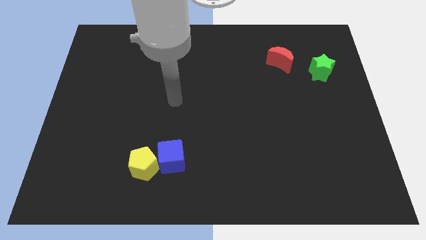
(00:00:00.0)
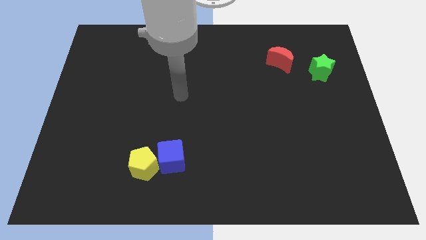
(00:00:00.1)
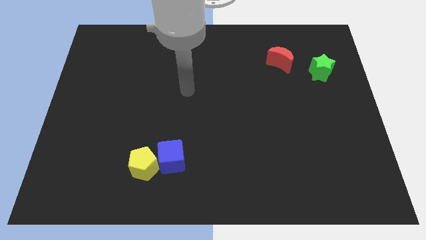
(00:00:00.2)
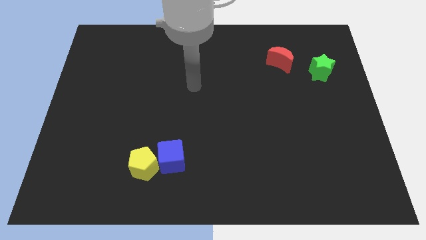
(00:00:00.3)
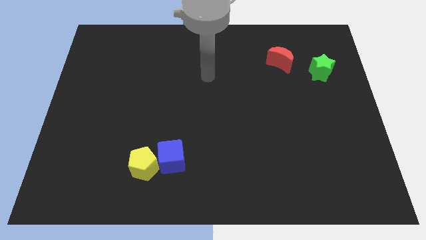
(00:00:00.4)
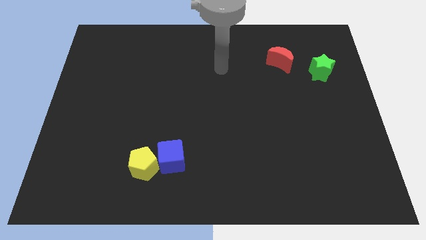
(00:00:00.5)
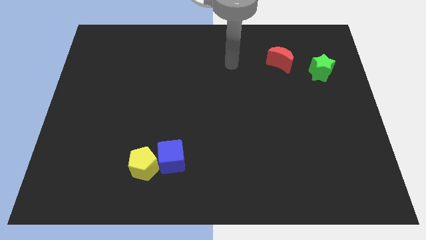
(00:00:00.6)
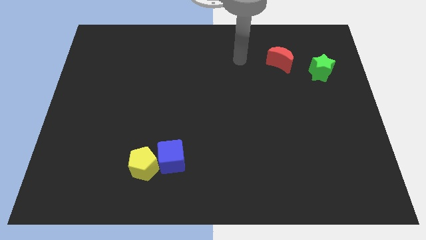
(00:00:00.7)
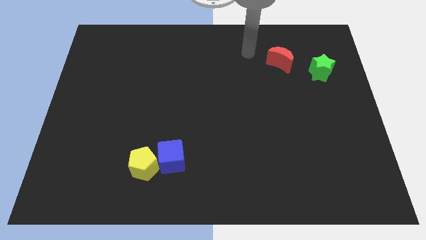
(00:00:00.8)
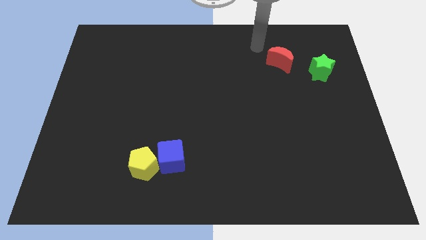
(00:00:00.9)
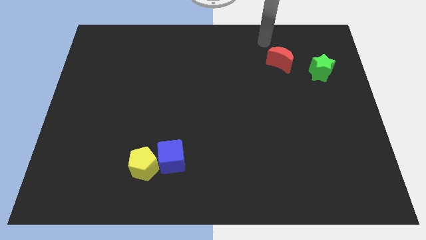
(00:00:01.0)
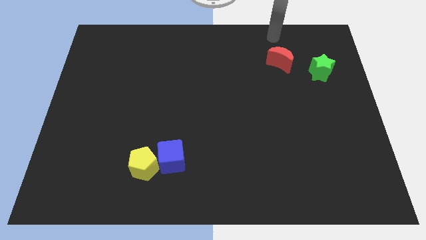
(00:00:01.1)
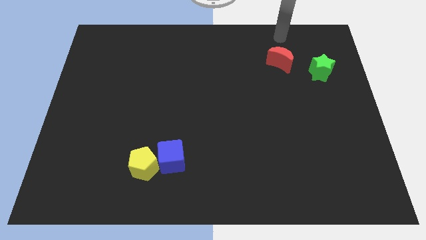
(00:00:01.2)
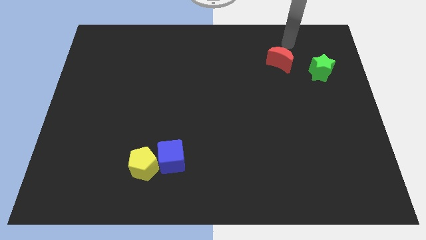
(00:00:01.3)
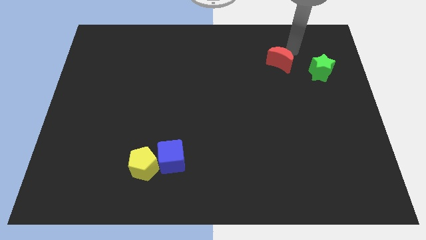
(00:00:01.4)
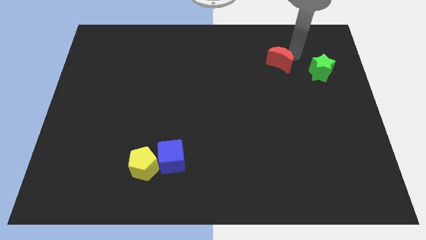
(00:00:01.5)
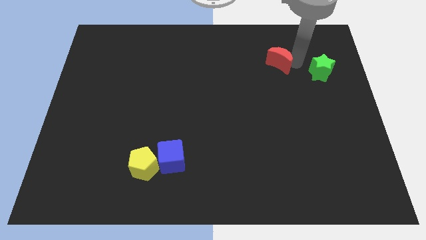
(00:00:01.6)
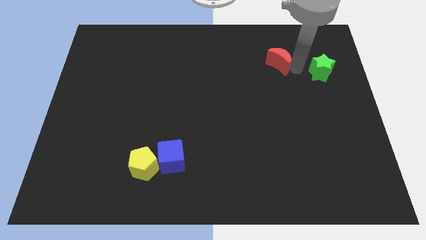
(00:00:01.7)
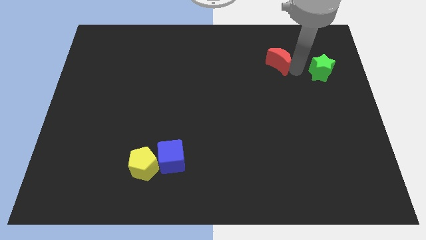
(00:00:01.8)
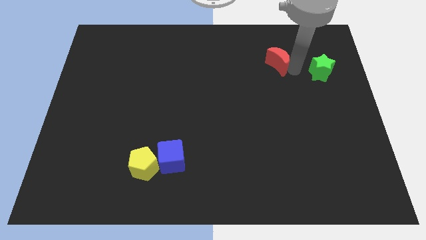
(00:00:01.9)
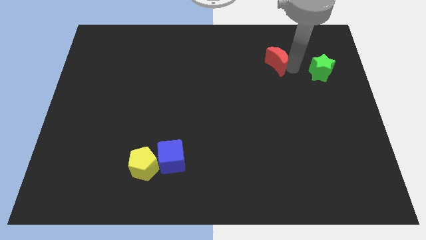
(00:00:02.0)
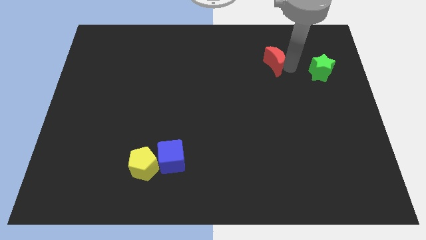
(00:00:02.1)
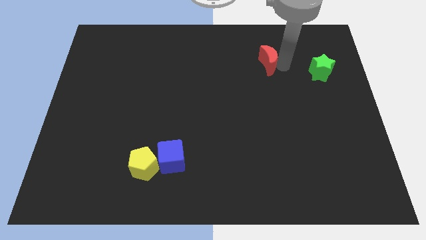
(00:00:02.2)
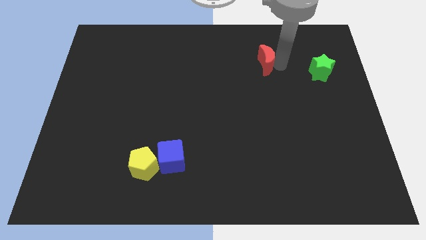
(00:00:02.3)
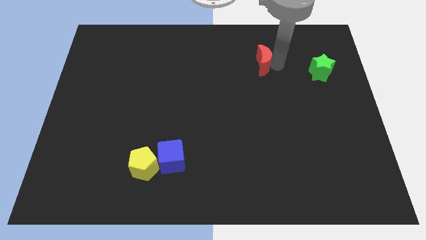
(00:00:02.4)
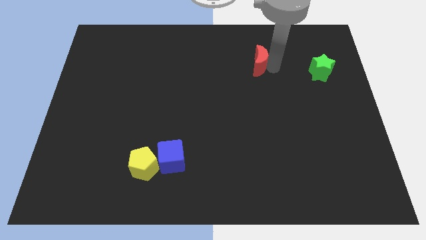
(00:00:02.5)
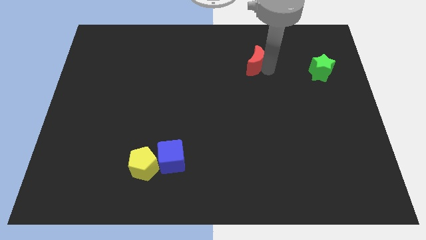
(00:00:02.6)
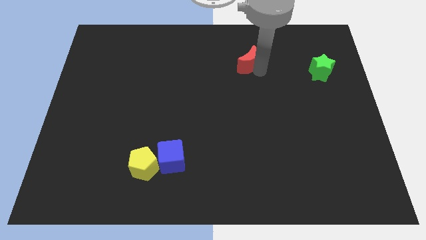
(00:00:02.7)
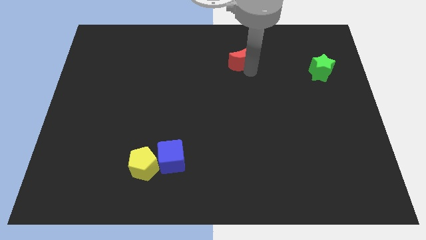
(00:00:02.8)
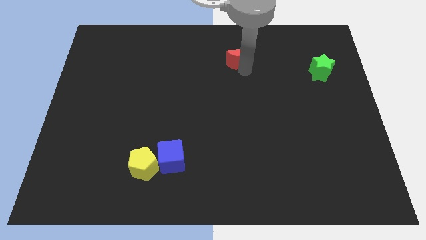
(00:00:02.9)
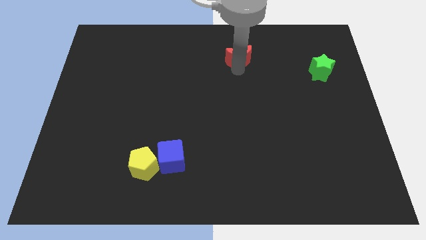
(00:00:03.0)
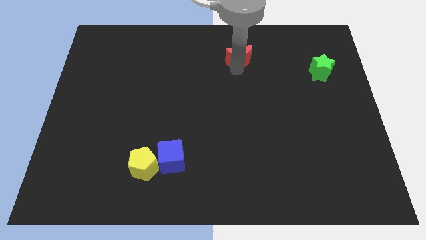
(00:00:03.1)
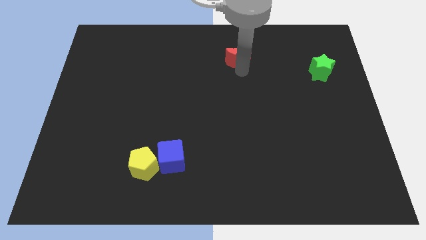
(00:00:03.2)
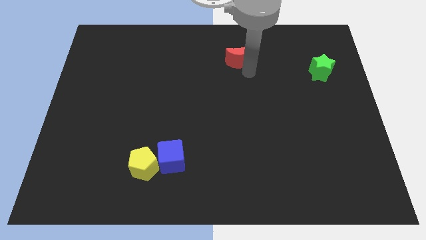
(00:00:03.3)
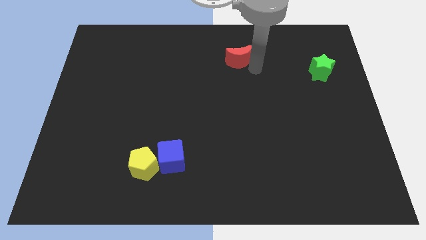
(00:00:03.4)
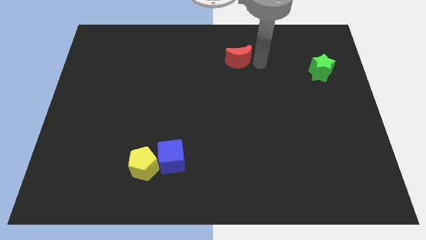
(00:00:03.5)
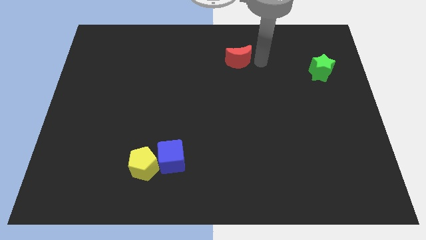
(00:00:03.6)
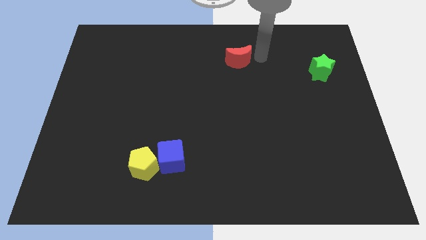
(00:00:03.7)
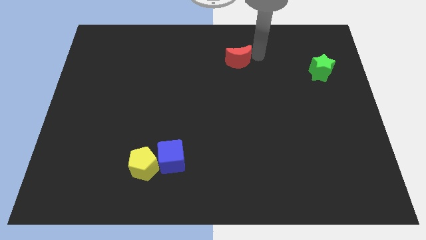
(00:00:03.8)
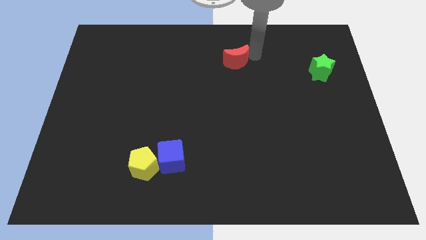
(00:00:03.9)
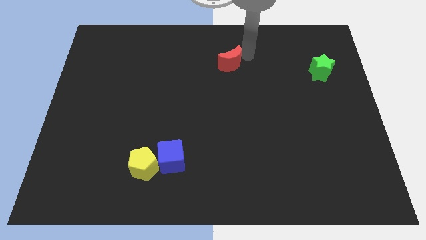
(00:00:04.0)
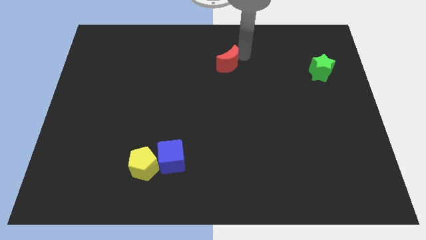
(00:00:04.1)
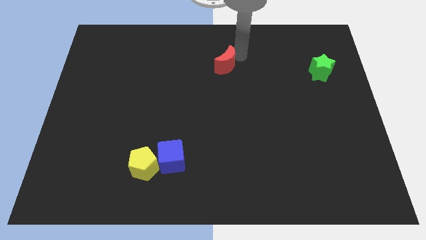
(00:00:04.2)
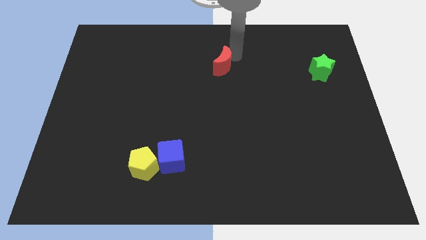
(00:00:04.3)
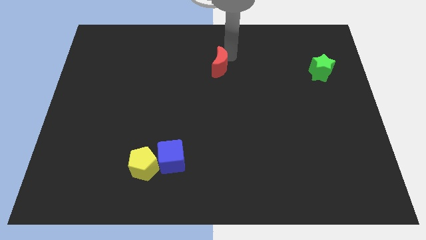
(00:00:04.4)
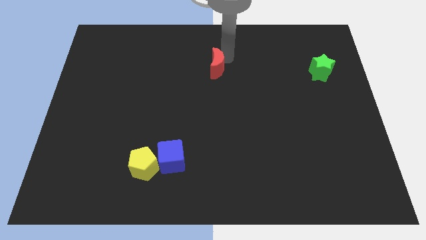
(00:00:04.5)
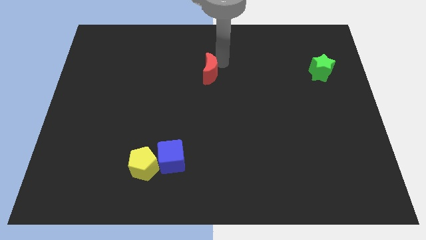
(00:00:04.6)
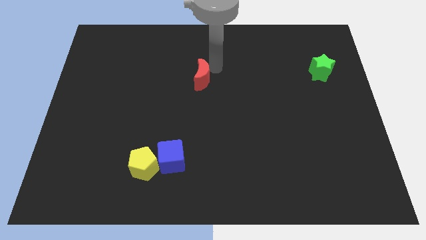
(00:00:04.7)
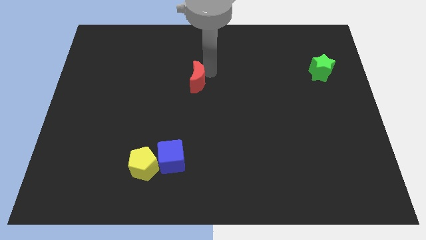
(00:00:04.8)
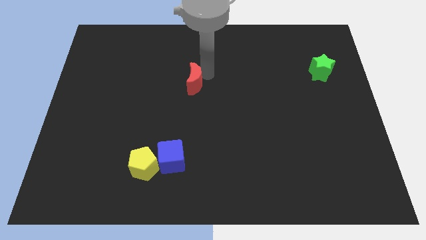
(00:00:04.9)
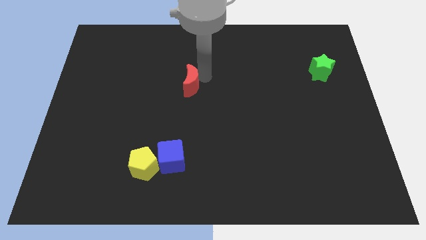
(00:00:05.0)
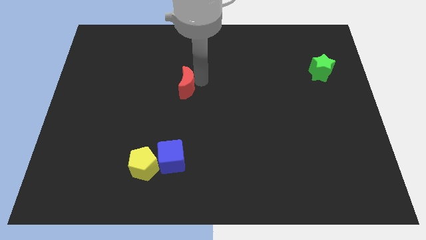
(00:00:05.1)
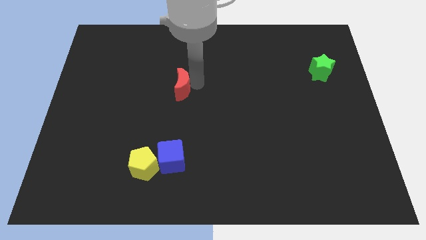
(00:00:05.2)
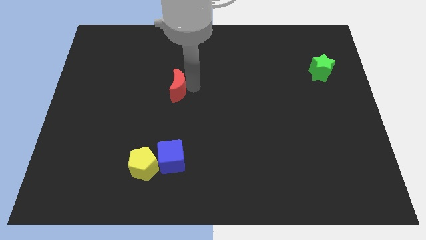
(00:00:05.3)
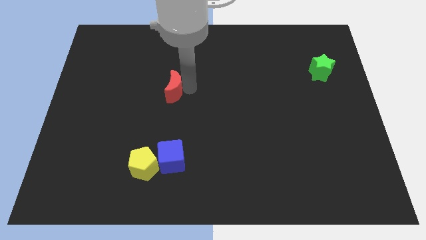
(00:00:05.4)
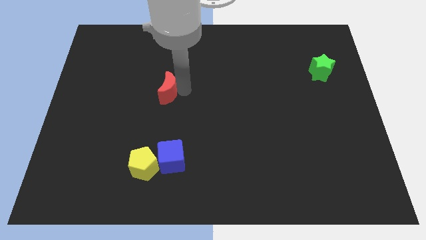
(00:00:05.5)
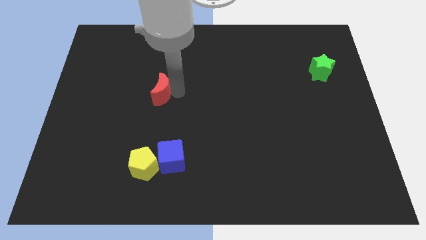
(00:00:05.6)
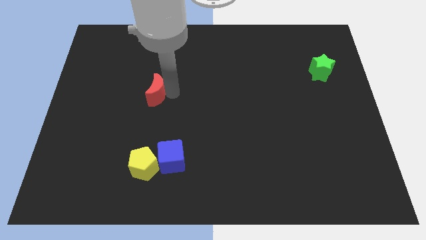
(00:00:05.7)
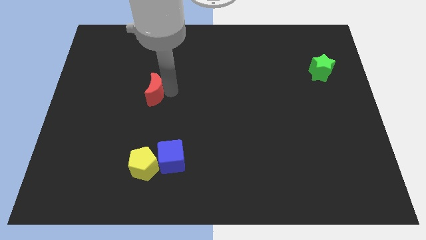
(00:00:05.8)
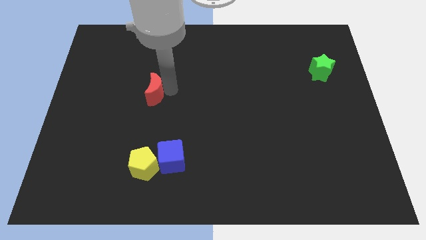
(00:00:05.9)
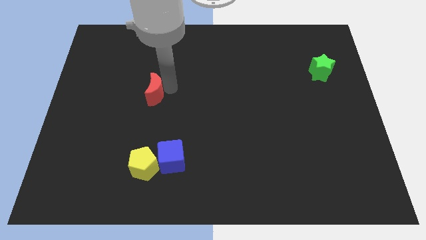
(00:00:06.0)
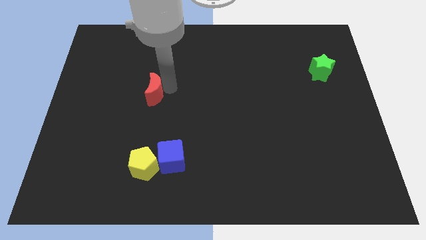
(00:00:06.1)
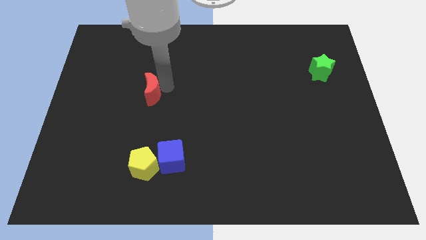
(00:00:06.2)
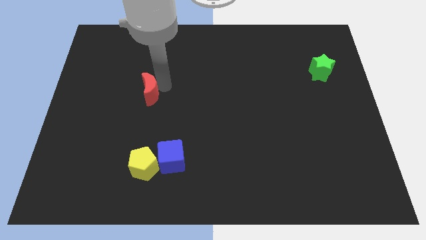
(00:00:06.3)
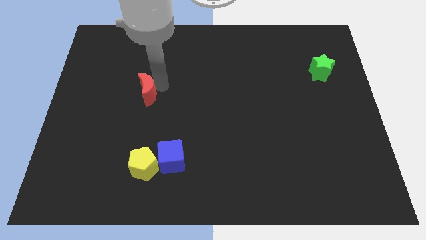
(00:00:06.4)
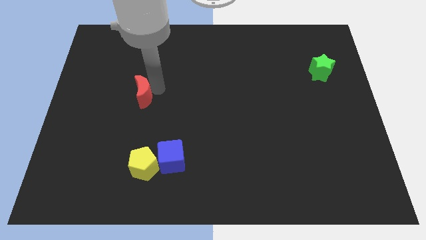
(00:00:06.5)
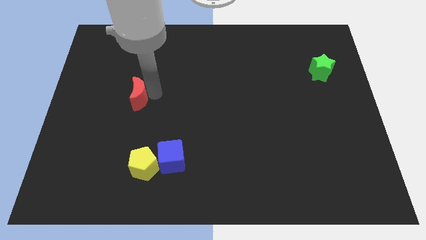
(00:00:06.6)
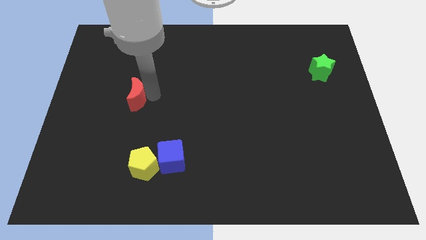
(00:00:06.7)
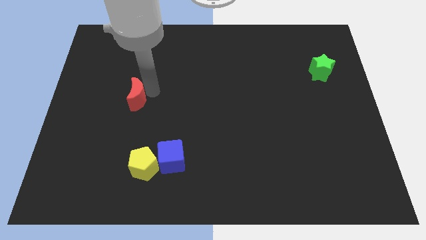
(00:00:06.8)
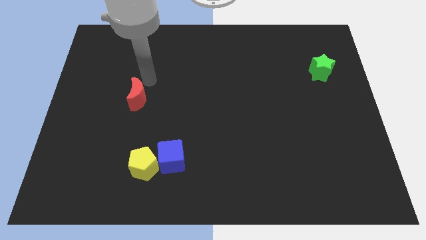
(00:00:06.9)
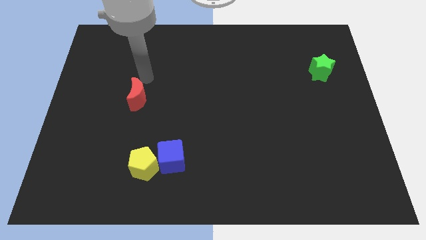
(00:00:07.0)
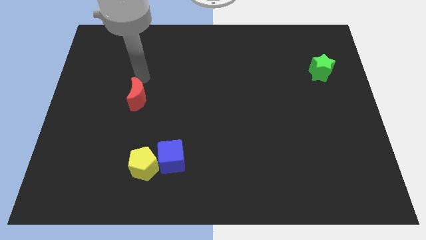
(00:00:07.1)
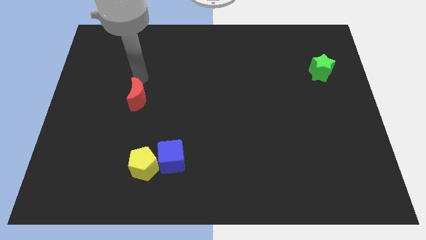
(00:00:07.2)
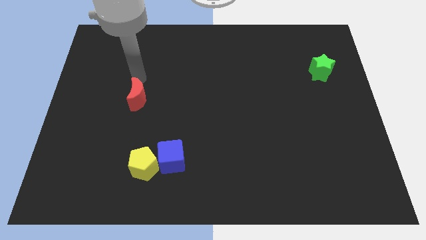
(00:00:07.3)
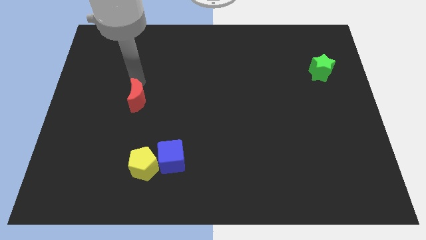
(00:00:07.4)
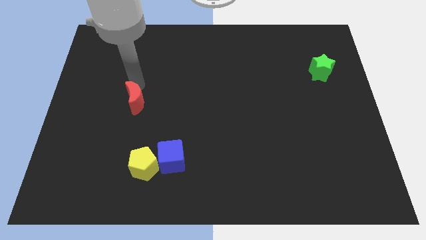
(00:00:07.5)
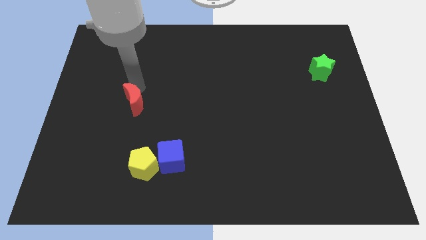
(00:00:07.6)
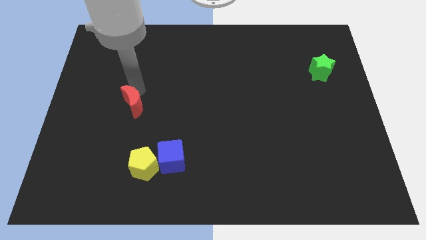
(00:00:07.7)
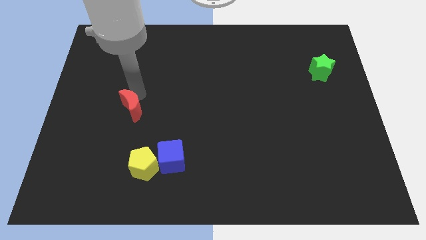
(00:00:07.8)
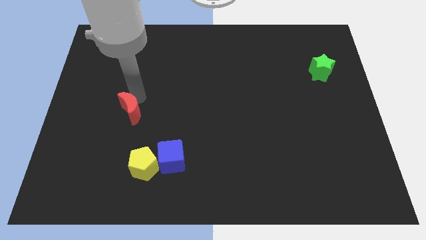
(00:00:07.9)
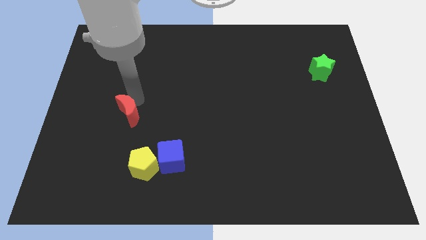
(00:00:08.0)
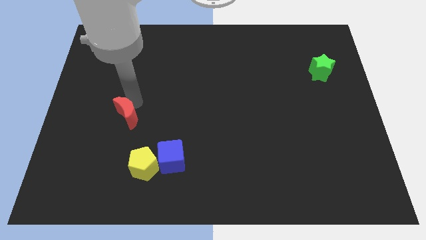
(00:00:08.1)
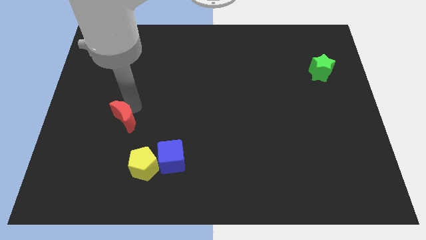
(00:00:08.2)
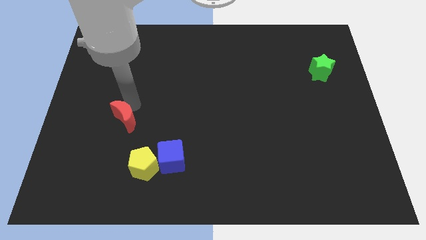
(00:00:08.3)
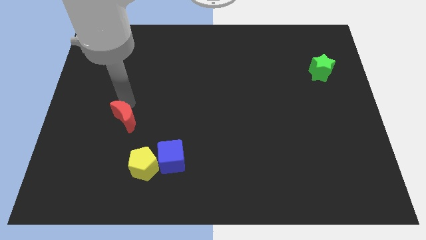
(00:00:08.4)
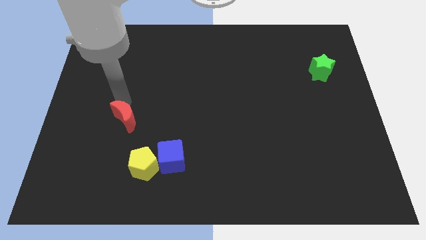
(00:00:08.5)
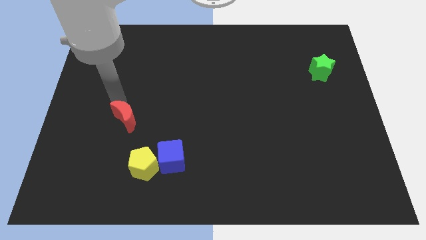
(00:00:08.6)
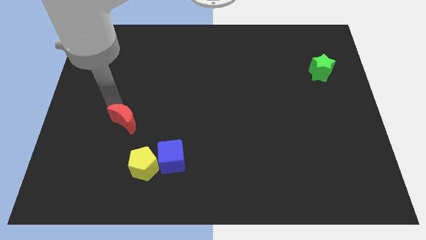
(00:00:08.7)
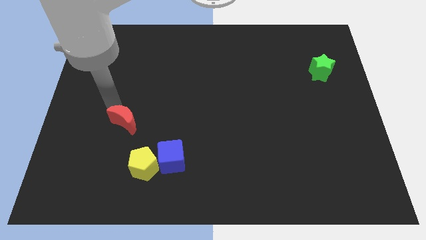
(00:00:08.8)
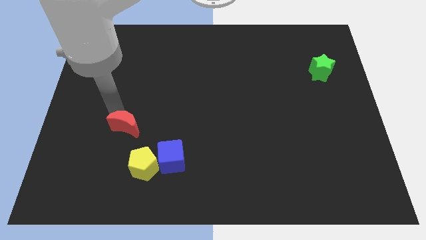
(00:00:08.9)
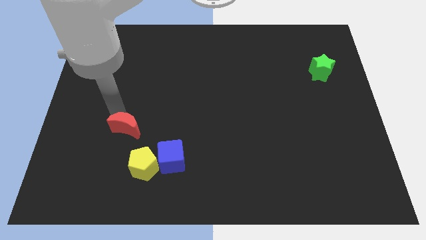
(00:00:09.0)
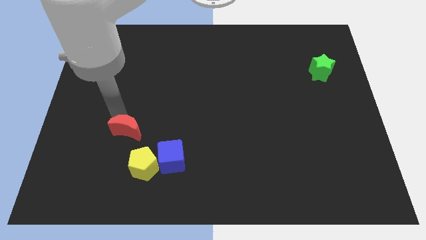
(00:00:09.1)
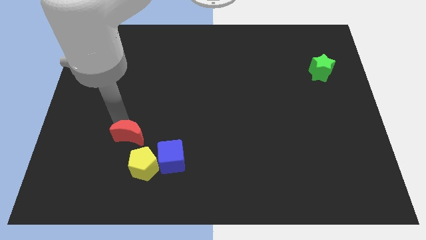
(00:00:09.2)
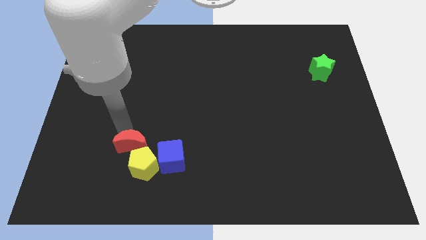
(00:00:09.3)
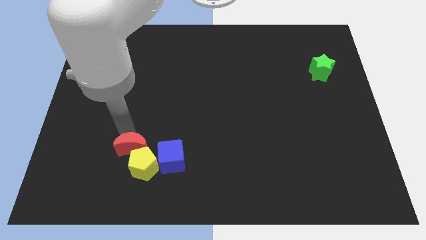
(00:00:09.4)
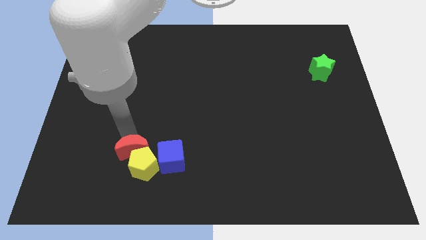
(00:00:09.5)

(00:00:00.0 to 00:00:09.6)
push the red moon next to the yellow pentagon
